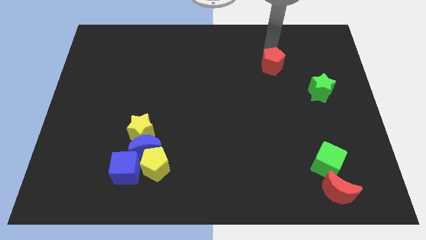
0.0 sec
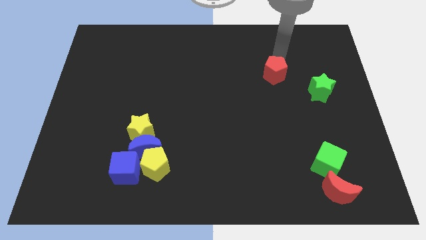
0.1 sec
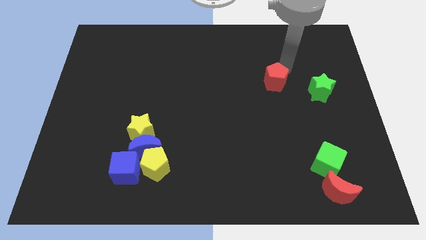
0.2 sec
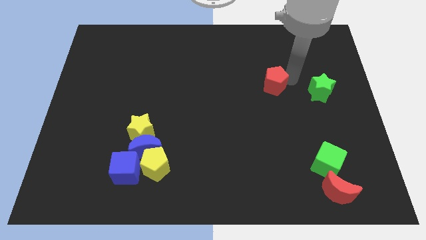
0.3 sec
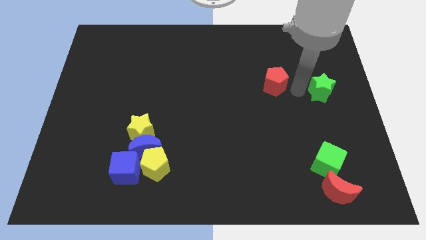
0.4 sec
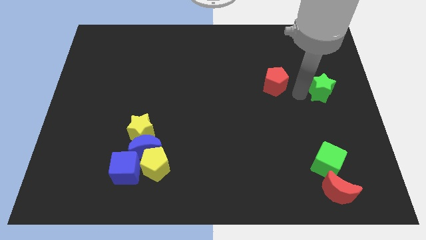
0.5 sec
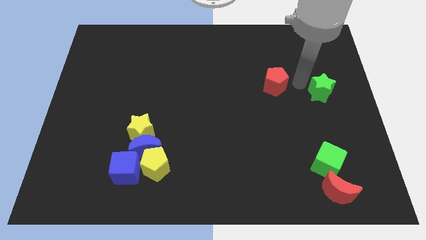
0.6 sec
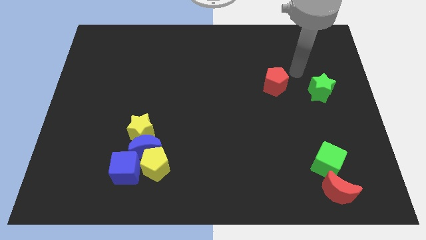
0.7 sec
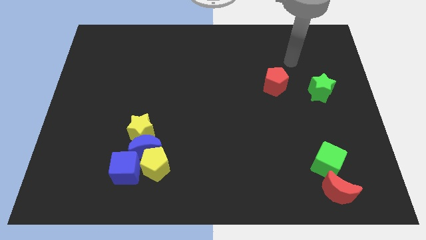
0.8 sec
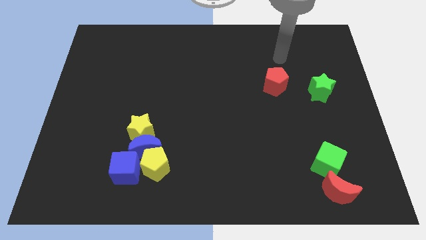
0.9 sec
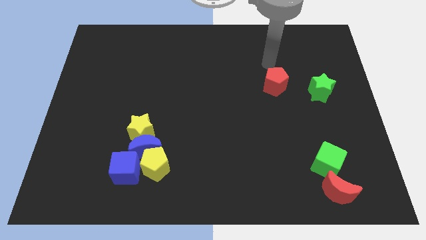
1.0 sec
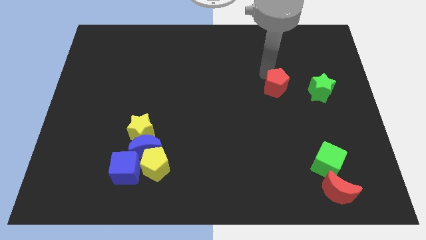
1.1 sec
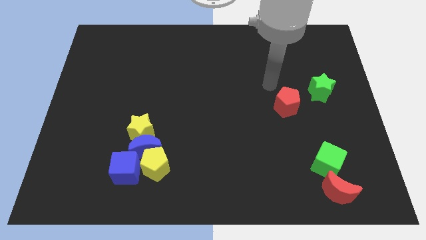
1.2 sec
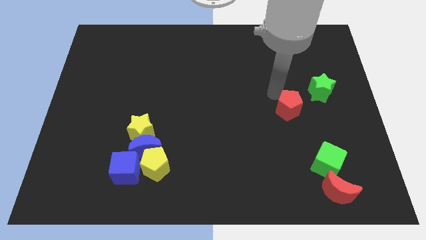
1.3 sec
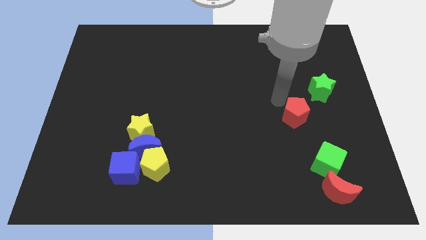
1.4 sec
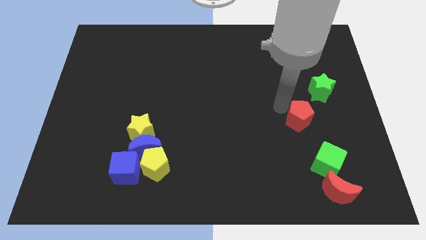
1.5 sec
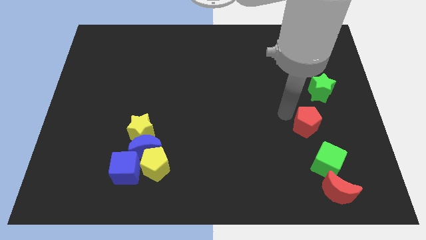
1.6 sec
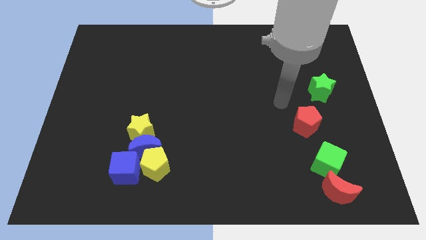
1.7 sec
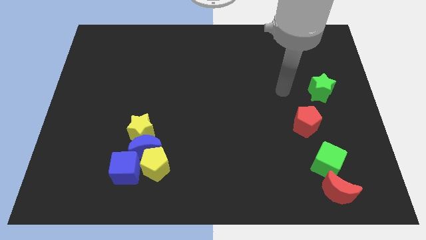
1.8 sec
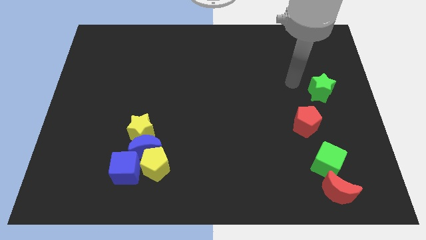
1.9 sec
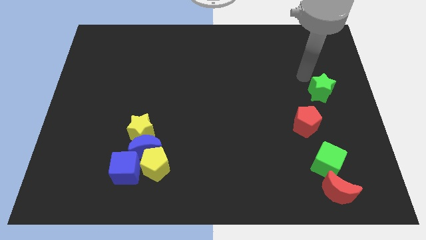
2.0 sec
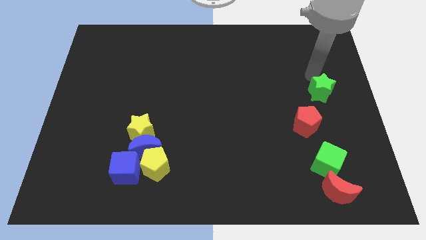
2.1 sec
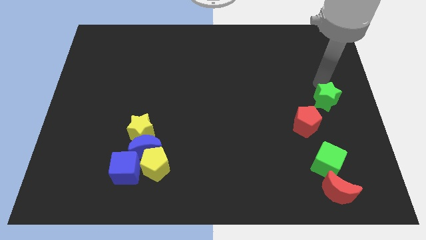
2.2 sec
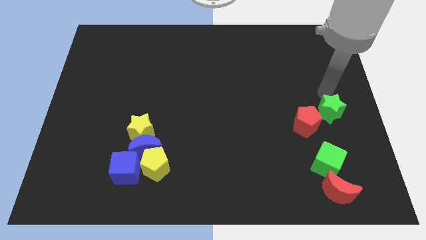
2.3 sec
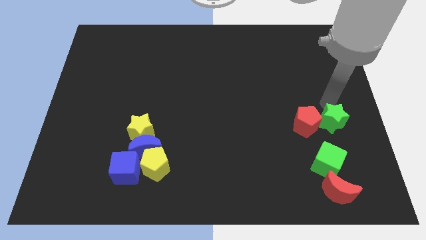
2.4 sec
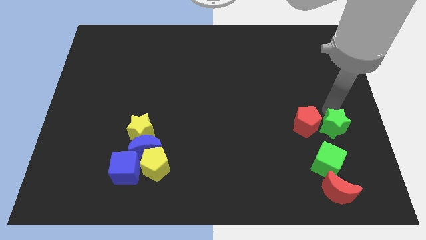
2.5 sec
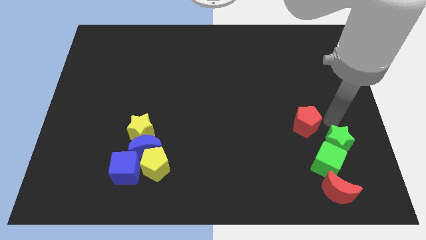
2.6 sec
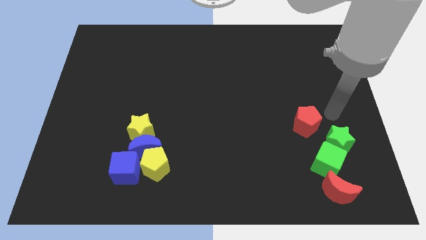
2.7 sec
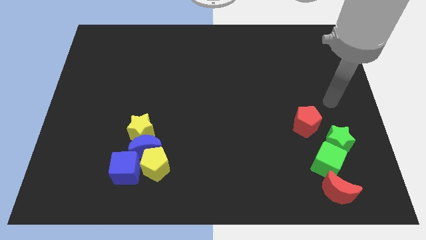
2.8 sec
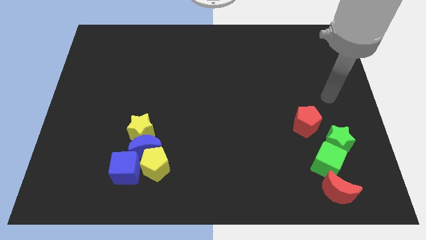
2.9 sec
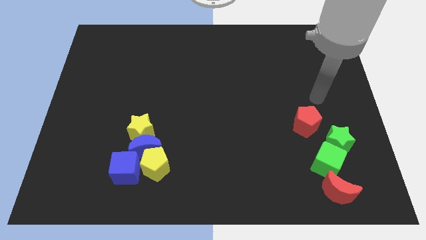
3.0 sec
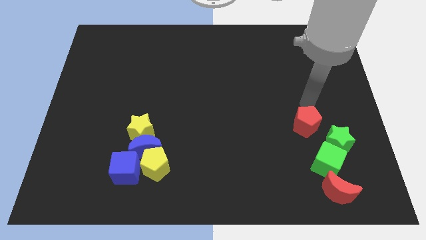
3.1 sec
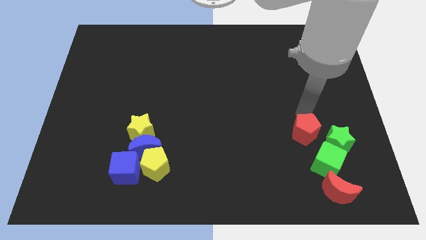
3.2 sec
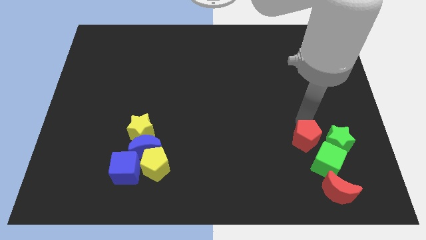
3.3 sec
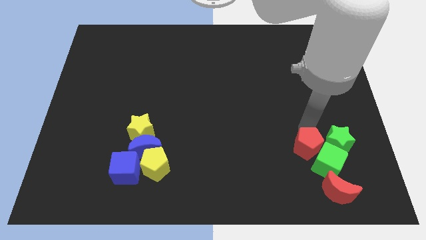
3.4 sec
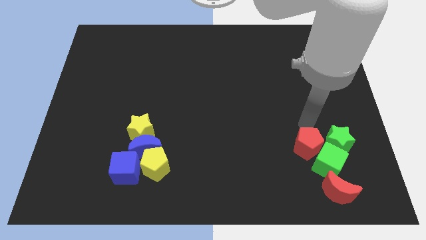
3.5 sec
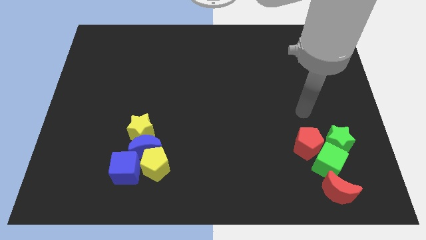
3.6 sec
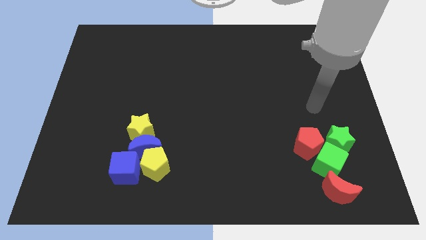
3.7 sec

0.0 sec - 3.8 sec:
slide the red pentagon and green star into the top side of the green cube

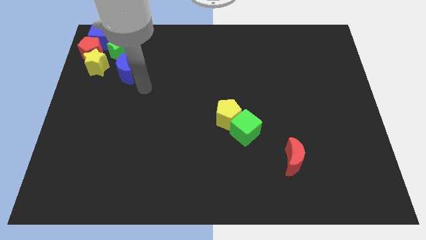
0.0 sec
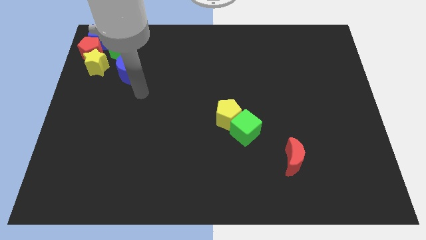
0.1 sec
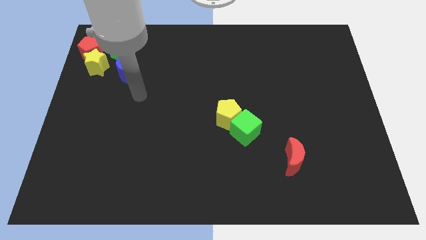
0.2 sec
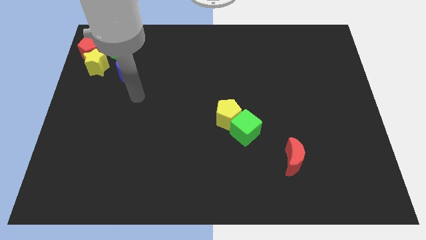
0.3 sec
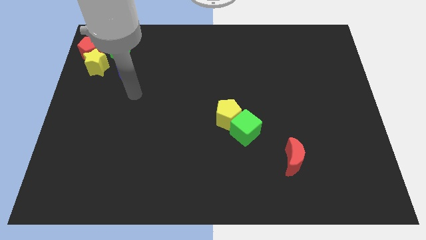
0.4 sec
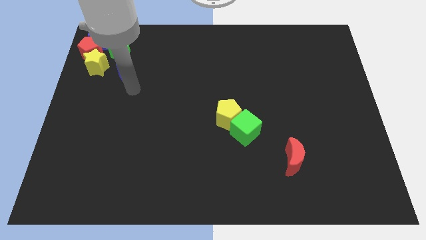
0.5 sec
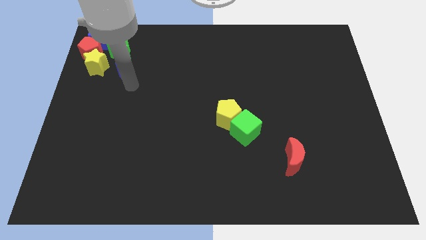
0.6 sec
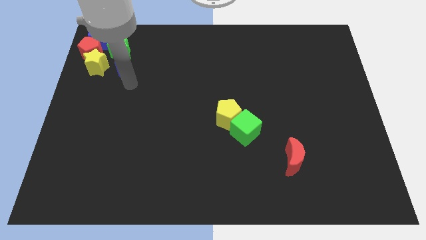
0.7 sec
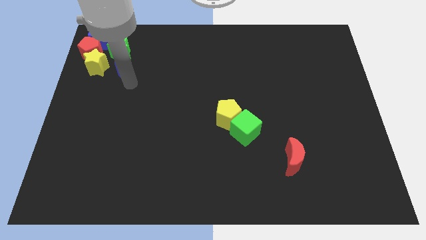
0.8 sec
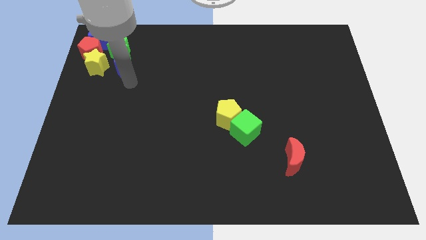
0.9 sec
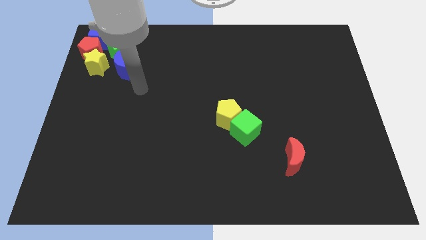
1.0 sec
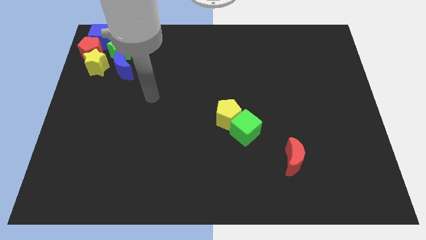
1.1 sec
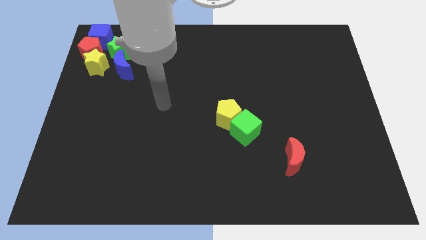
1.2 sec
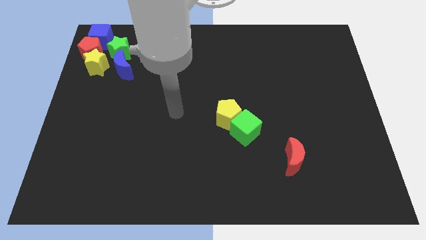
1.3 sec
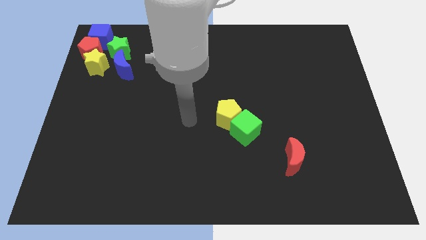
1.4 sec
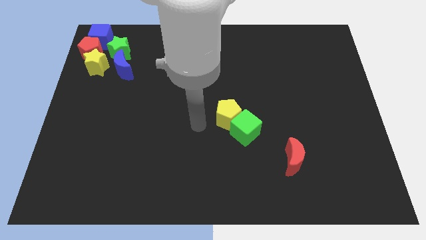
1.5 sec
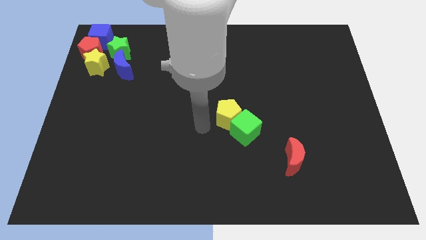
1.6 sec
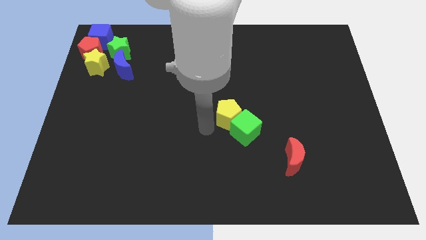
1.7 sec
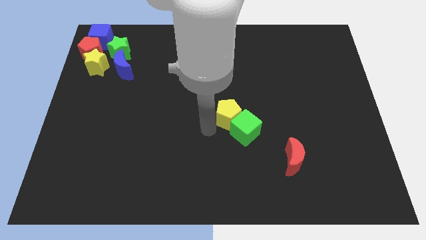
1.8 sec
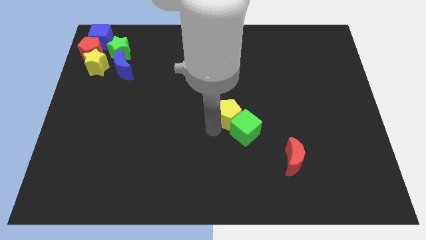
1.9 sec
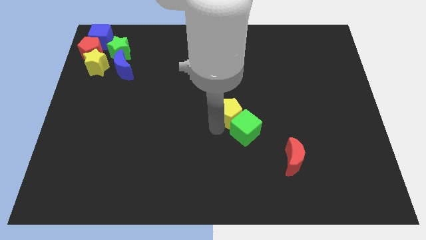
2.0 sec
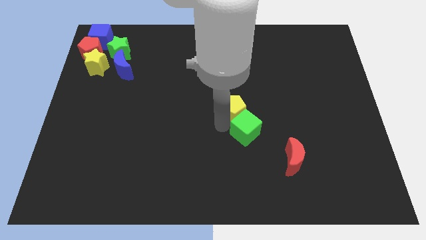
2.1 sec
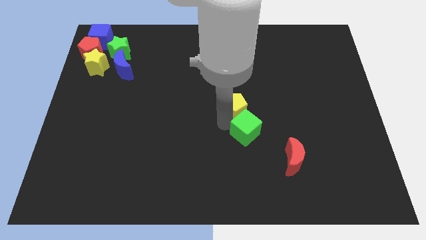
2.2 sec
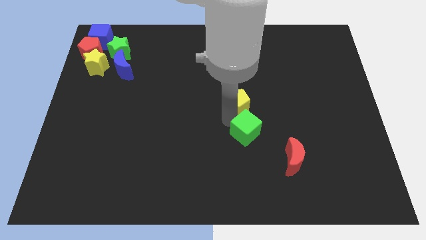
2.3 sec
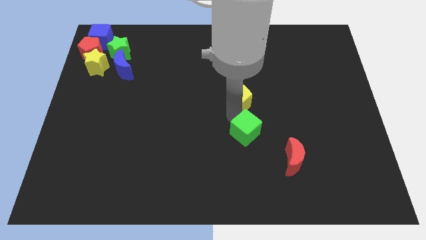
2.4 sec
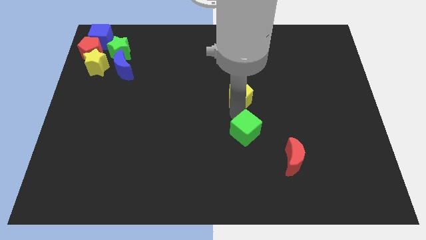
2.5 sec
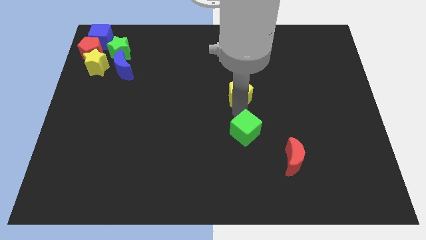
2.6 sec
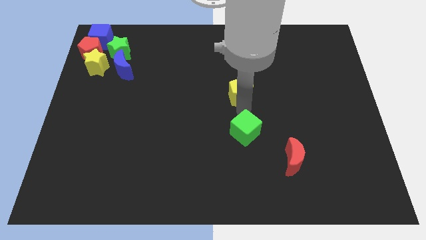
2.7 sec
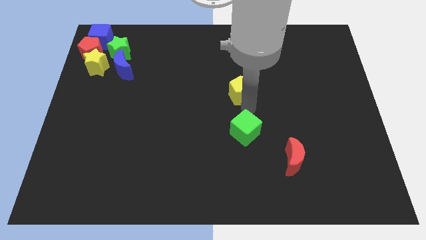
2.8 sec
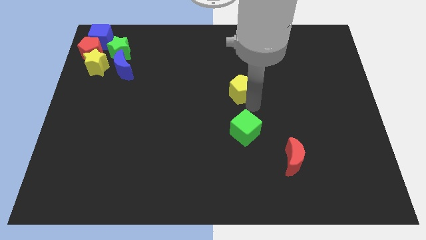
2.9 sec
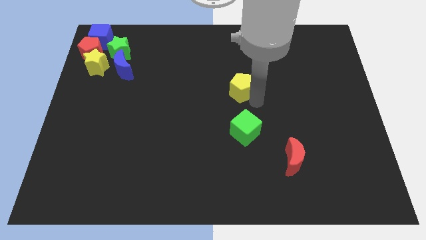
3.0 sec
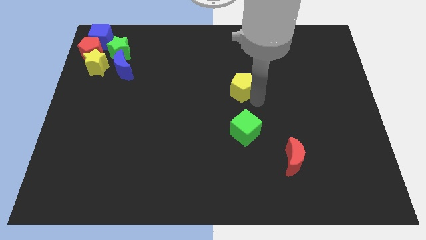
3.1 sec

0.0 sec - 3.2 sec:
slide the yellow pentagon above the green cube

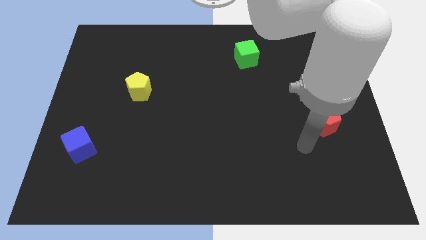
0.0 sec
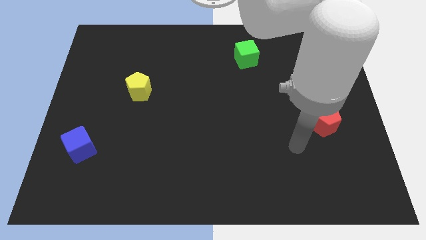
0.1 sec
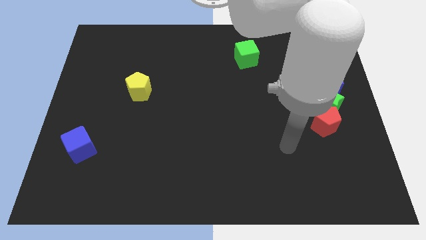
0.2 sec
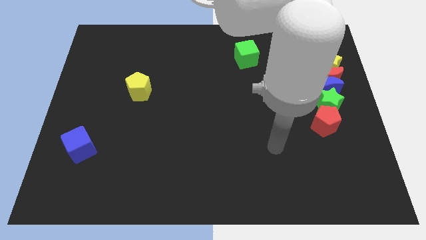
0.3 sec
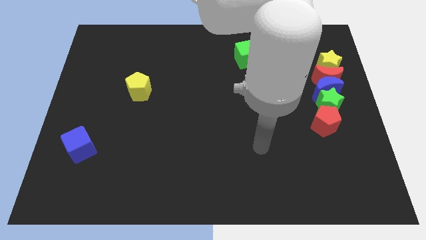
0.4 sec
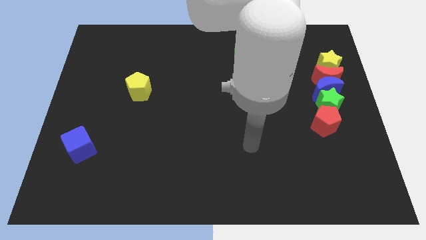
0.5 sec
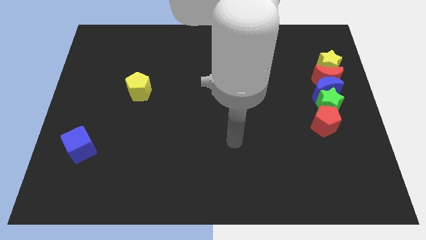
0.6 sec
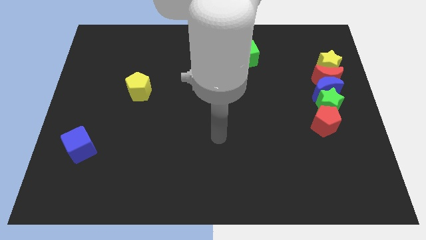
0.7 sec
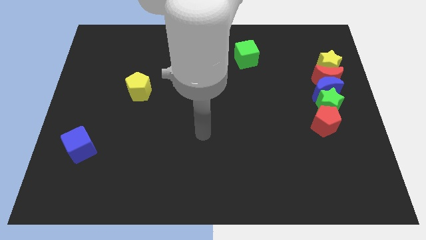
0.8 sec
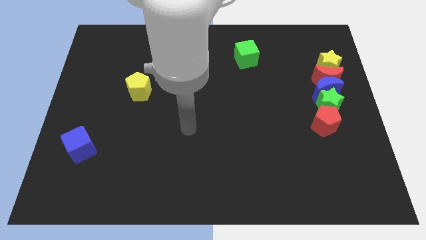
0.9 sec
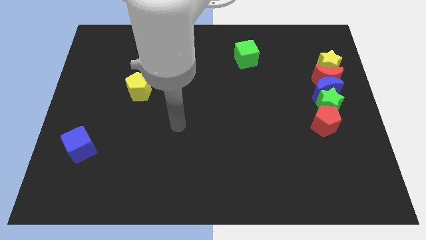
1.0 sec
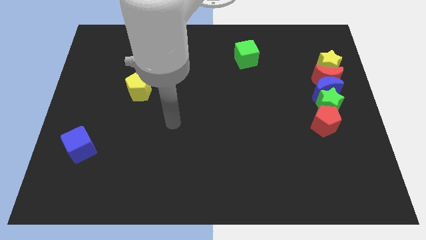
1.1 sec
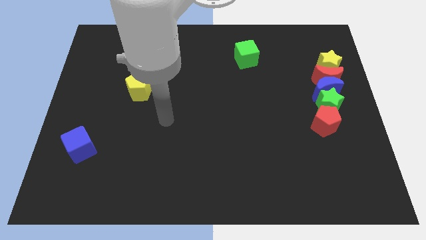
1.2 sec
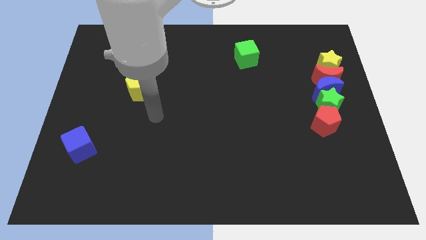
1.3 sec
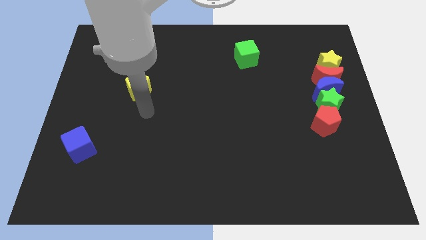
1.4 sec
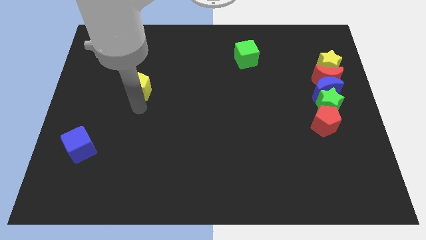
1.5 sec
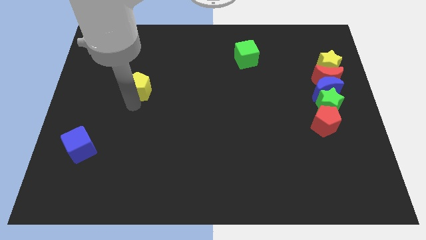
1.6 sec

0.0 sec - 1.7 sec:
place the arm below the yellow pentagon

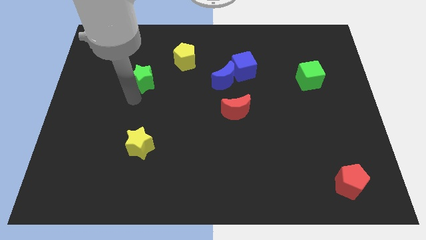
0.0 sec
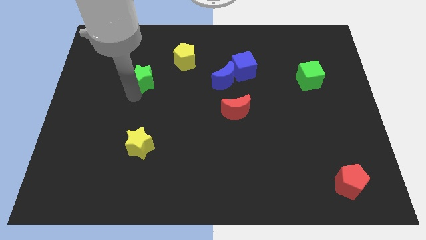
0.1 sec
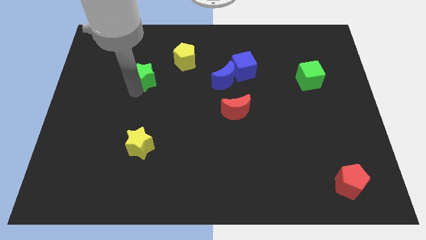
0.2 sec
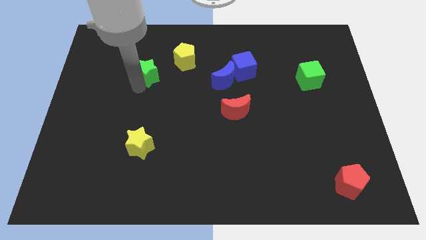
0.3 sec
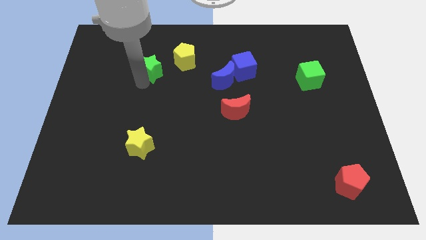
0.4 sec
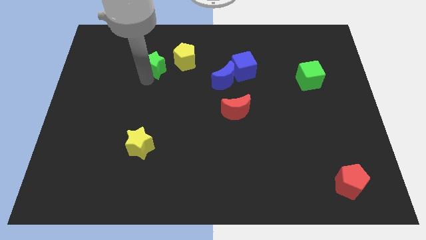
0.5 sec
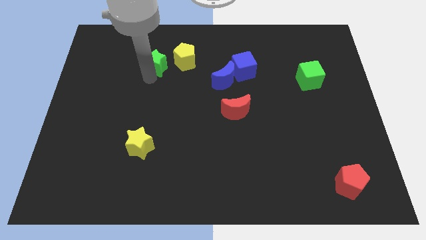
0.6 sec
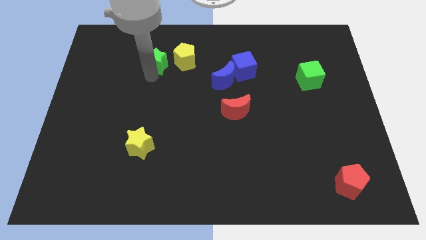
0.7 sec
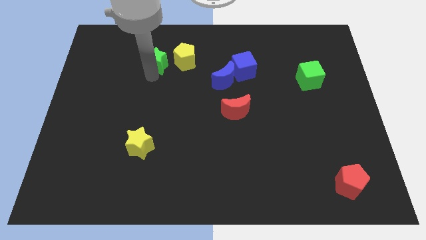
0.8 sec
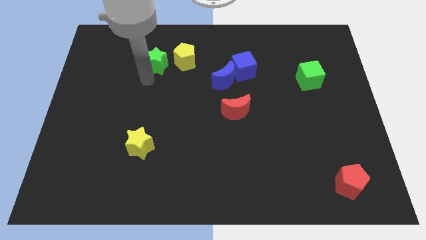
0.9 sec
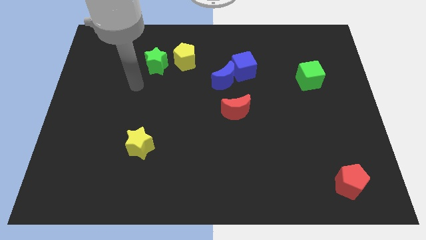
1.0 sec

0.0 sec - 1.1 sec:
move the green star to the left side of the yellow pentagon
